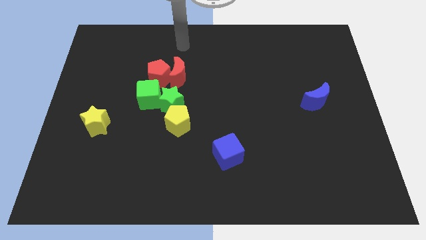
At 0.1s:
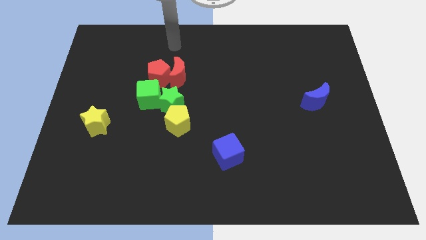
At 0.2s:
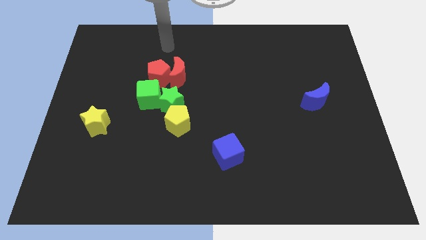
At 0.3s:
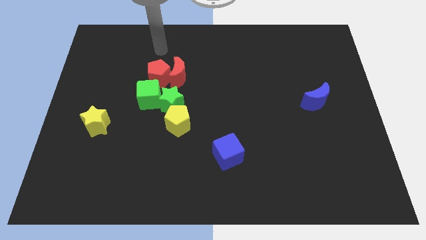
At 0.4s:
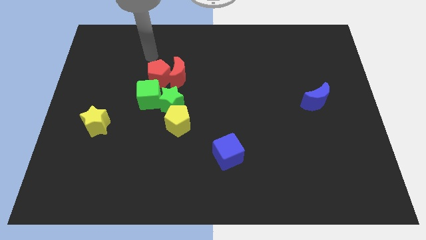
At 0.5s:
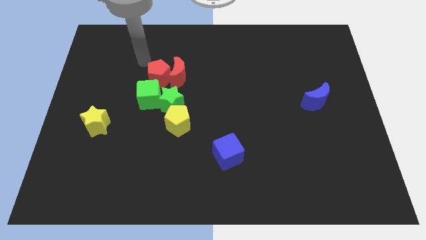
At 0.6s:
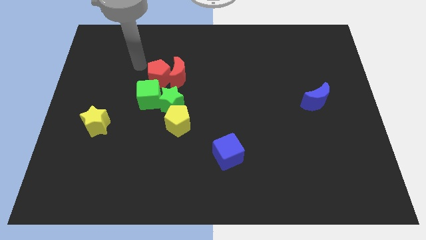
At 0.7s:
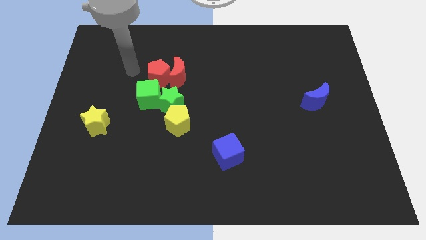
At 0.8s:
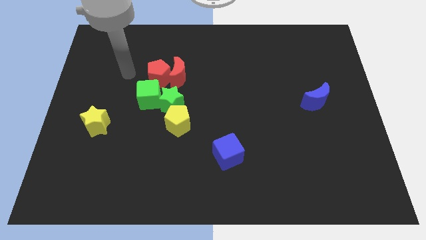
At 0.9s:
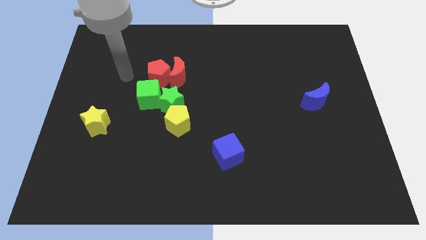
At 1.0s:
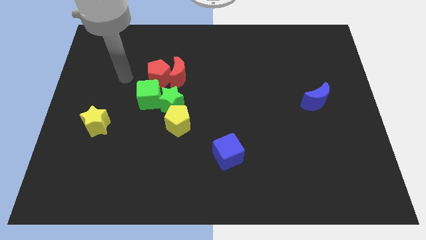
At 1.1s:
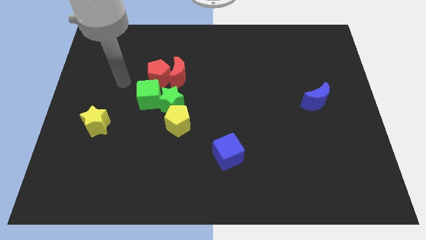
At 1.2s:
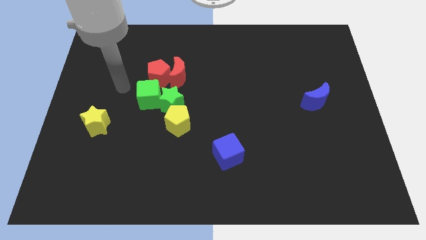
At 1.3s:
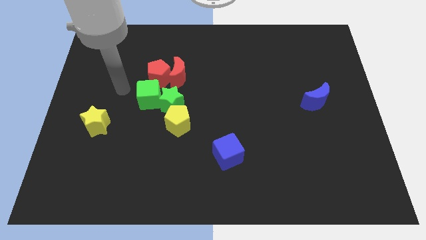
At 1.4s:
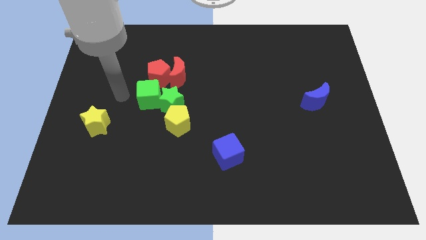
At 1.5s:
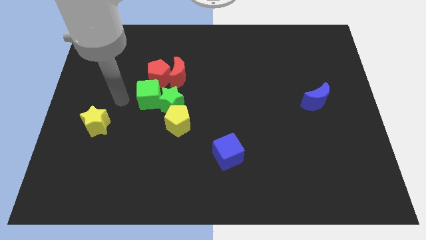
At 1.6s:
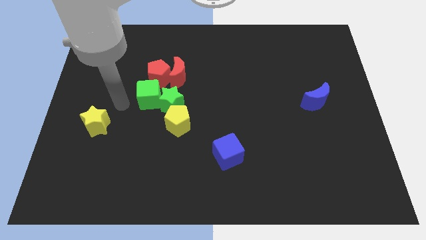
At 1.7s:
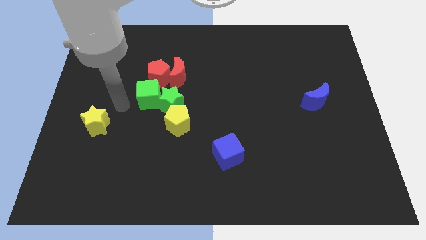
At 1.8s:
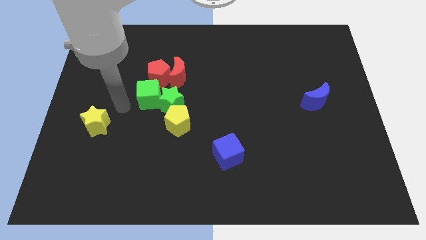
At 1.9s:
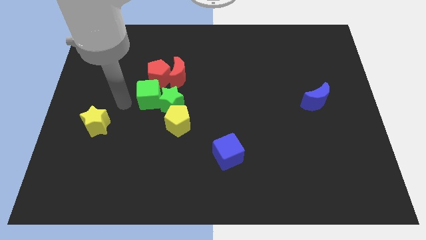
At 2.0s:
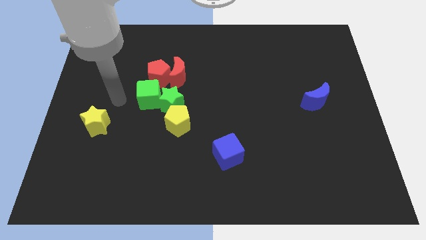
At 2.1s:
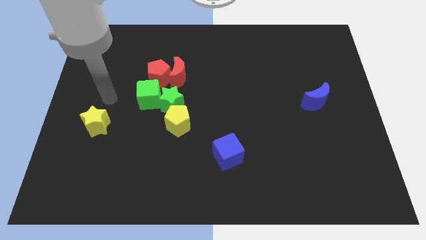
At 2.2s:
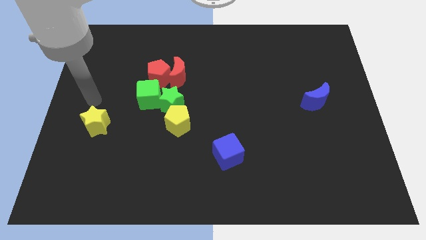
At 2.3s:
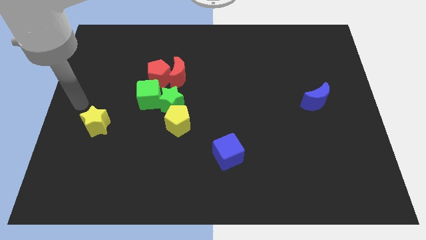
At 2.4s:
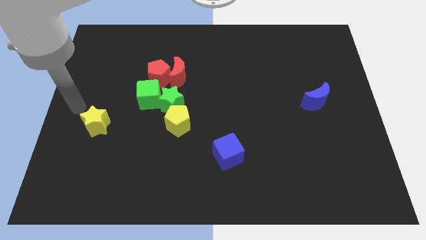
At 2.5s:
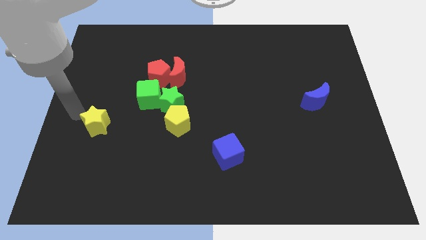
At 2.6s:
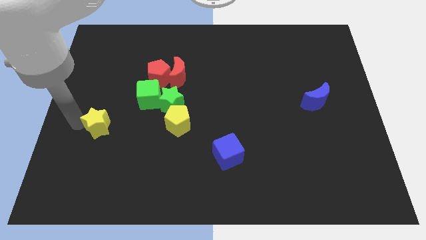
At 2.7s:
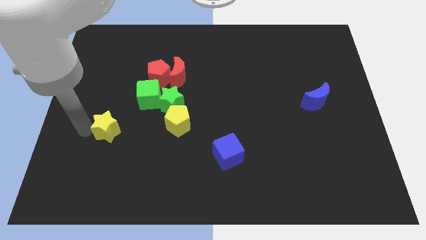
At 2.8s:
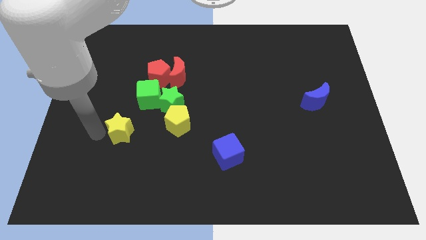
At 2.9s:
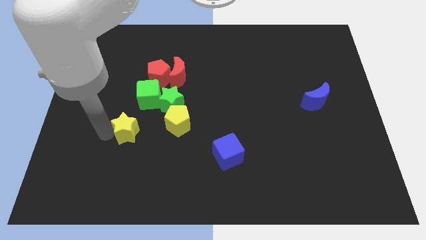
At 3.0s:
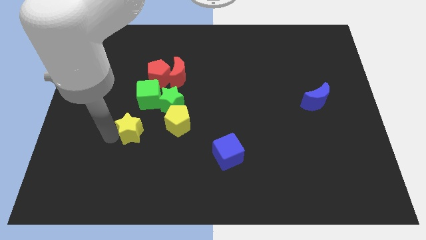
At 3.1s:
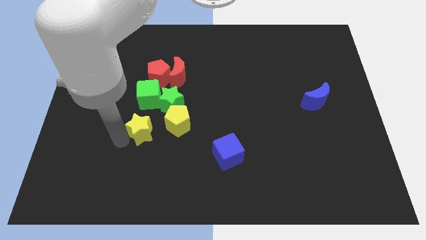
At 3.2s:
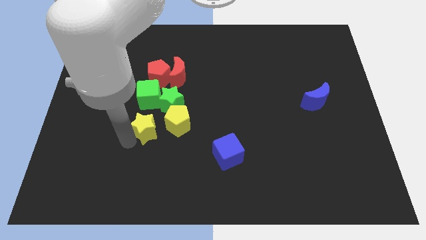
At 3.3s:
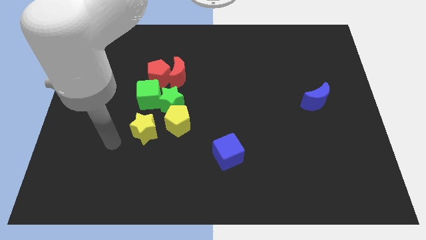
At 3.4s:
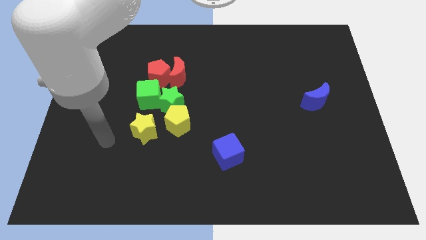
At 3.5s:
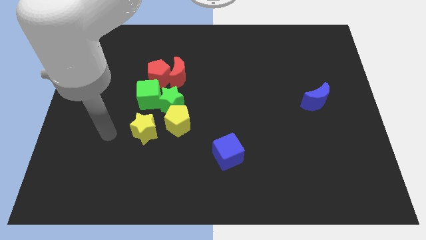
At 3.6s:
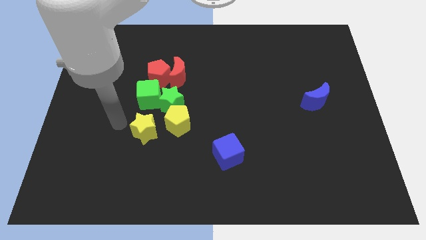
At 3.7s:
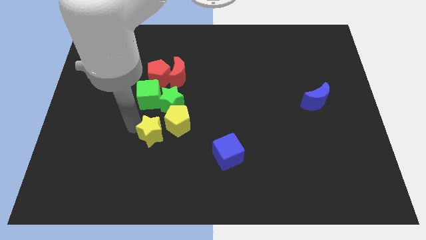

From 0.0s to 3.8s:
push the yellow star to the left of the yellow pentagon

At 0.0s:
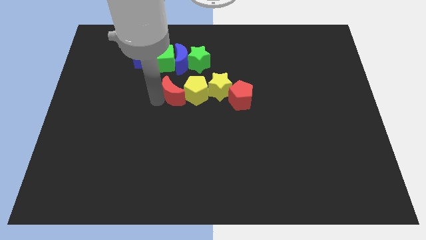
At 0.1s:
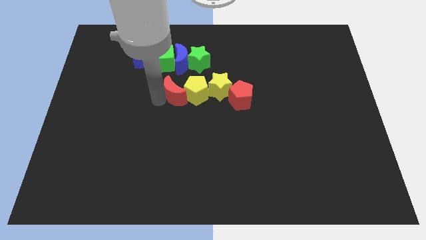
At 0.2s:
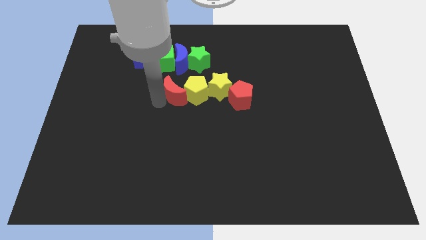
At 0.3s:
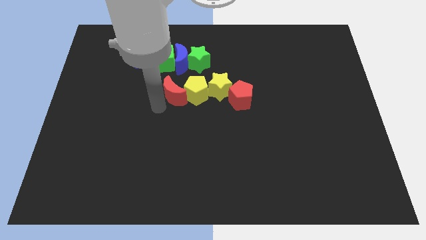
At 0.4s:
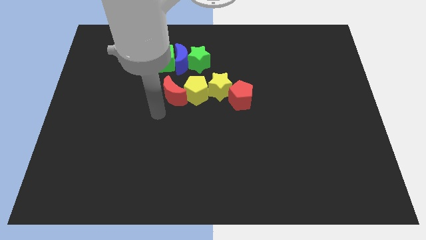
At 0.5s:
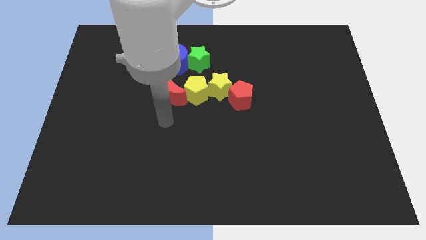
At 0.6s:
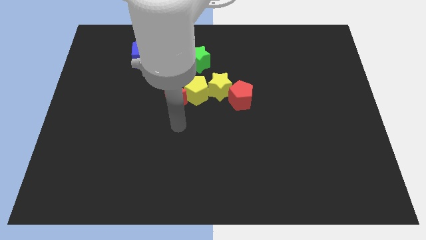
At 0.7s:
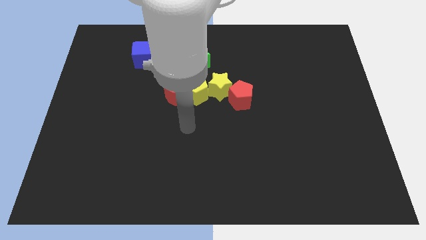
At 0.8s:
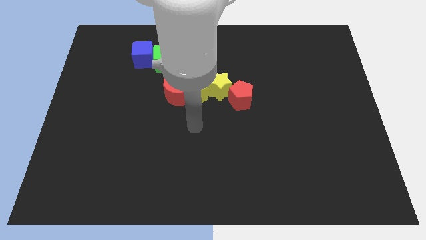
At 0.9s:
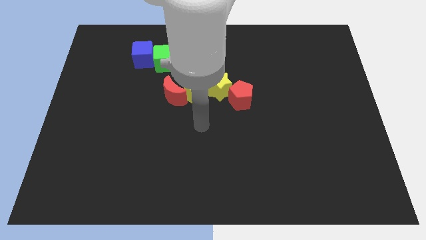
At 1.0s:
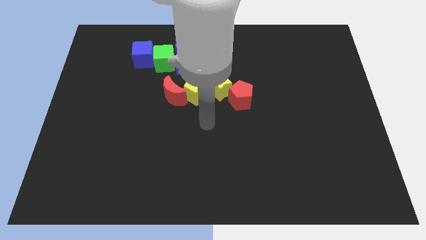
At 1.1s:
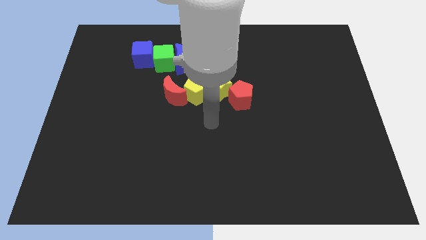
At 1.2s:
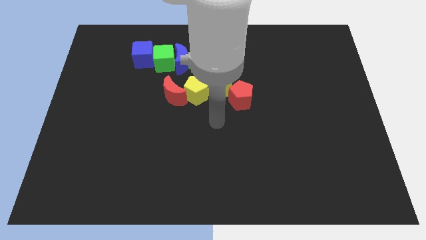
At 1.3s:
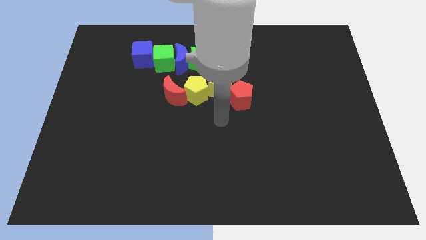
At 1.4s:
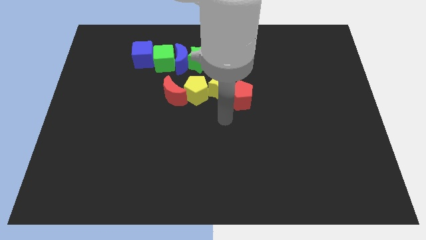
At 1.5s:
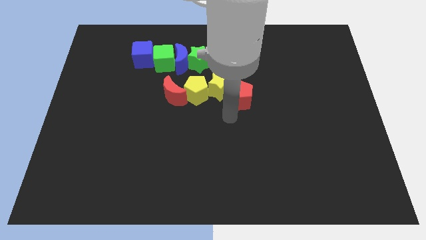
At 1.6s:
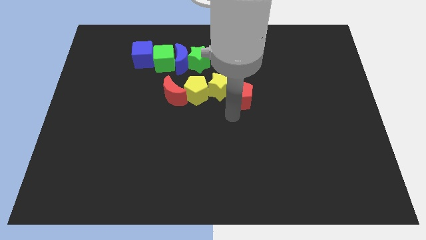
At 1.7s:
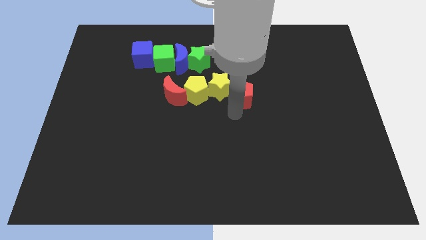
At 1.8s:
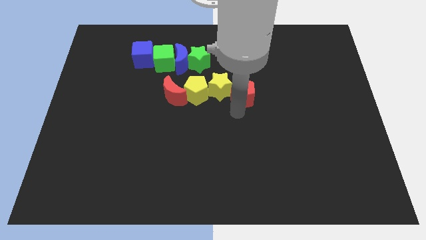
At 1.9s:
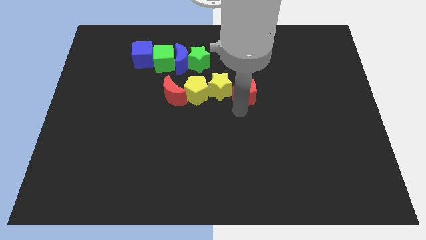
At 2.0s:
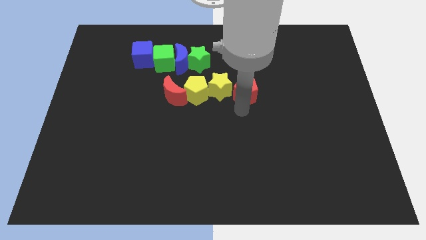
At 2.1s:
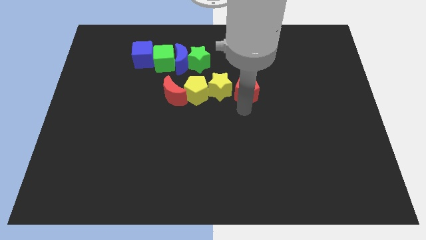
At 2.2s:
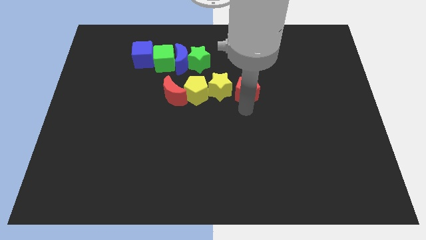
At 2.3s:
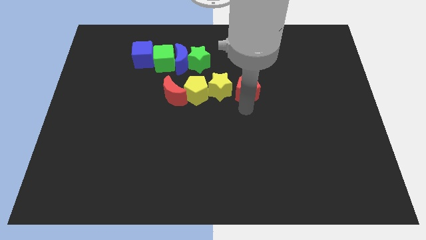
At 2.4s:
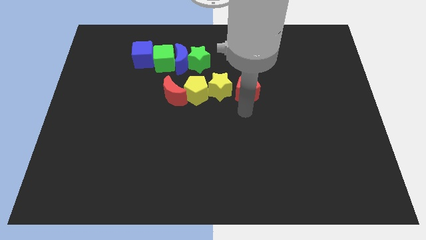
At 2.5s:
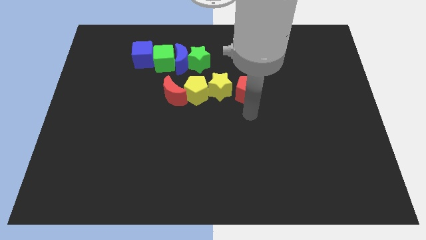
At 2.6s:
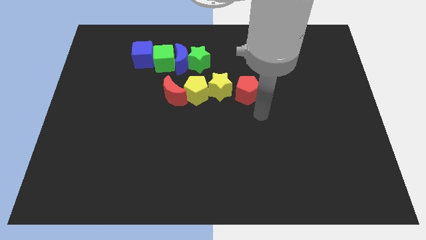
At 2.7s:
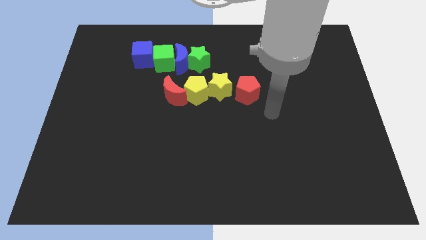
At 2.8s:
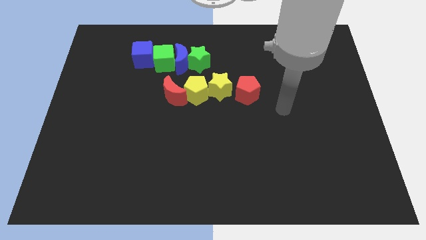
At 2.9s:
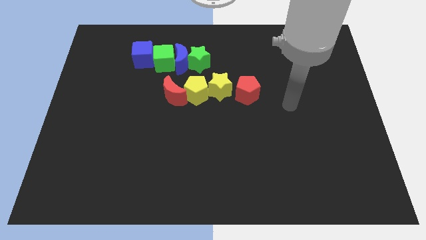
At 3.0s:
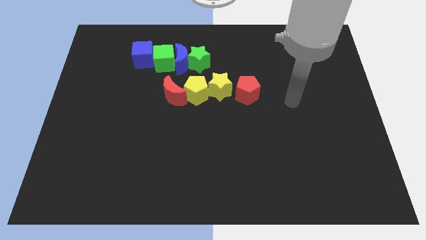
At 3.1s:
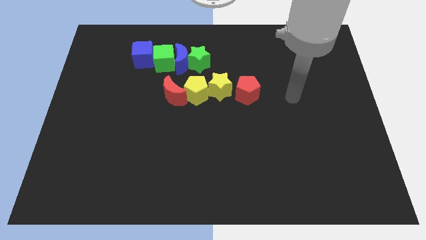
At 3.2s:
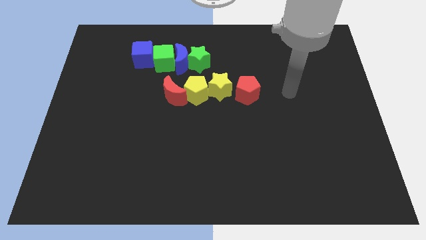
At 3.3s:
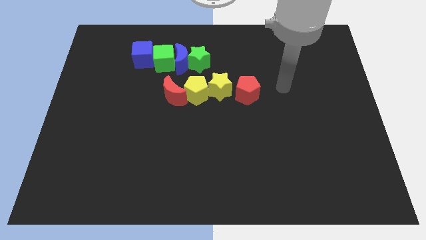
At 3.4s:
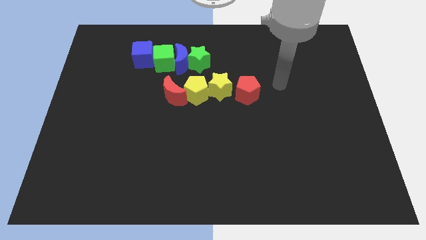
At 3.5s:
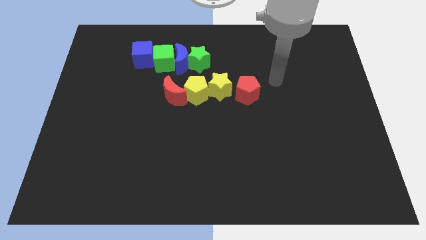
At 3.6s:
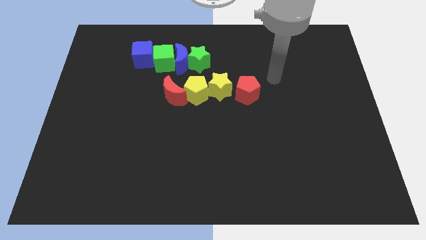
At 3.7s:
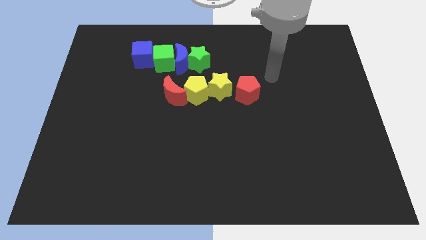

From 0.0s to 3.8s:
place your arm to the right of the red pentagon

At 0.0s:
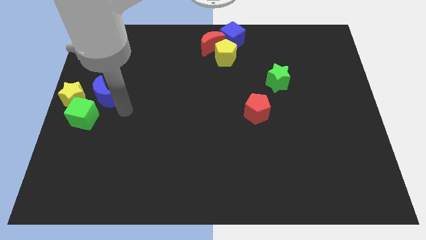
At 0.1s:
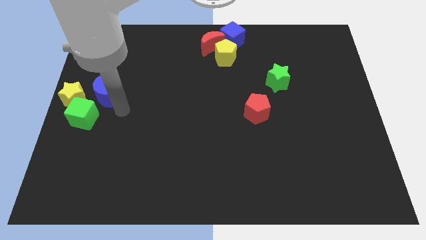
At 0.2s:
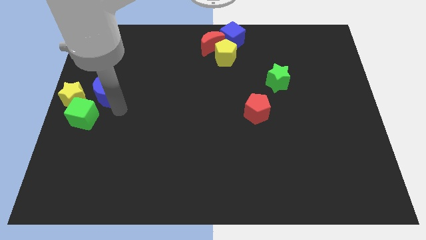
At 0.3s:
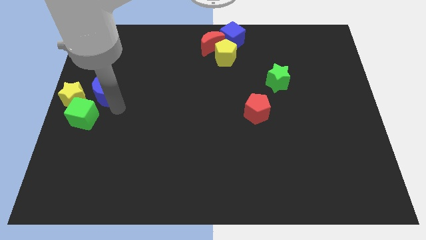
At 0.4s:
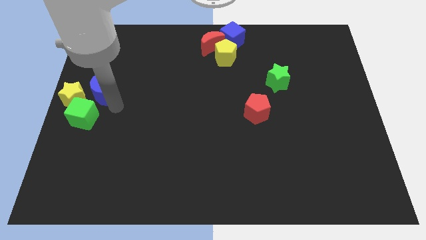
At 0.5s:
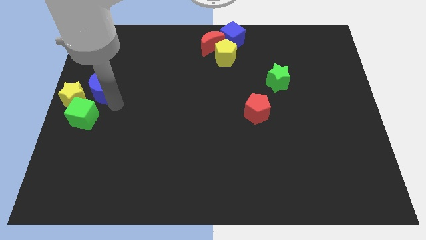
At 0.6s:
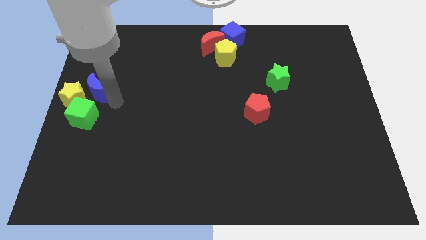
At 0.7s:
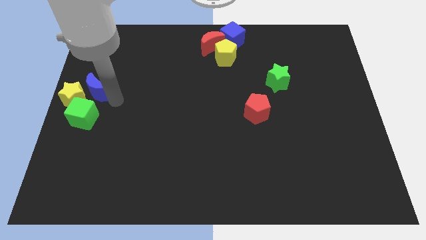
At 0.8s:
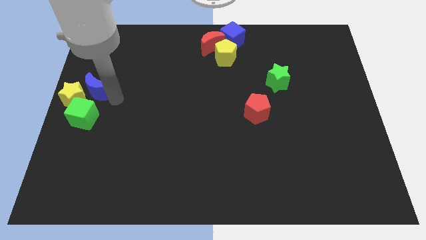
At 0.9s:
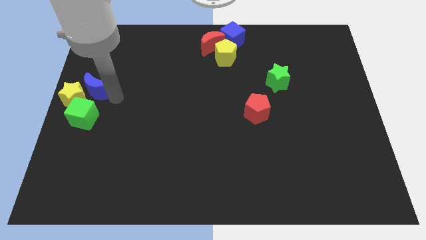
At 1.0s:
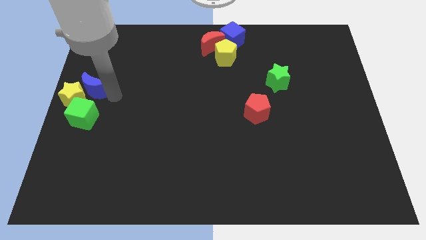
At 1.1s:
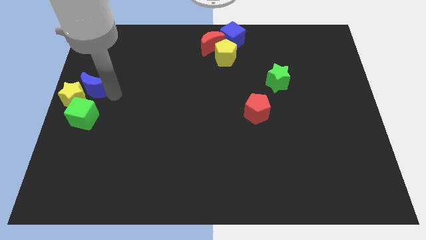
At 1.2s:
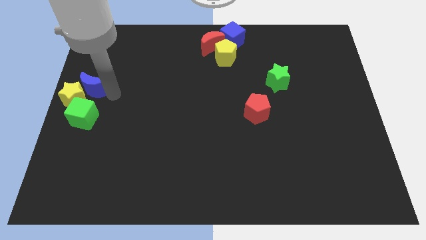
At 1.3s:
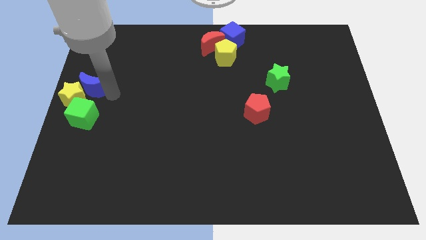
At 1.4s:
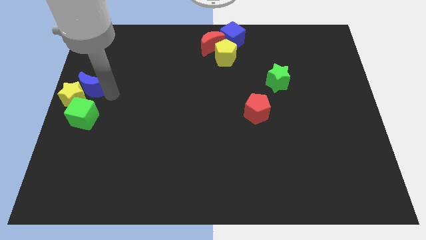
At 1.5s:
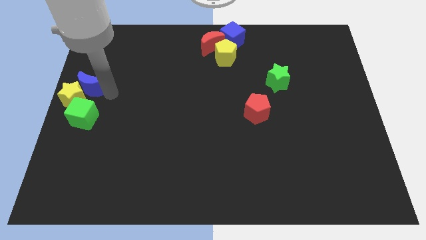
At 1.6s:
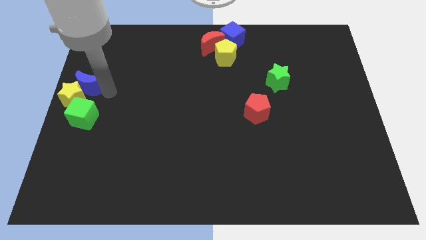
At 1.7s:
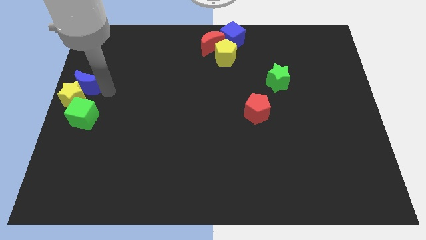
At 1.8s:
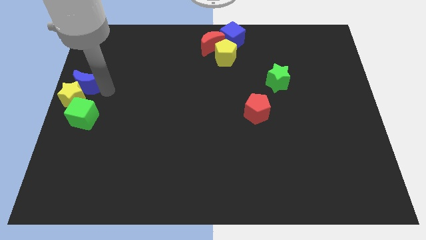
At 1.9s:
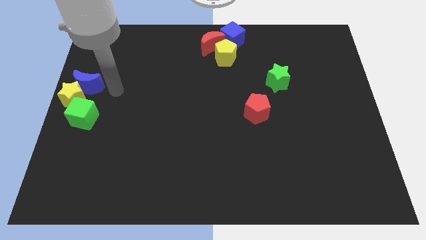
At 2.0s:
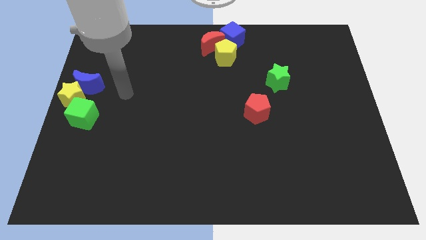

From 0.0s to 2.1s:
slide the blue moon into the yellow star
